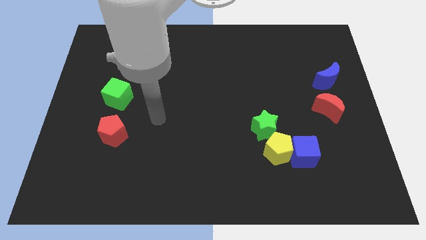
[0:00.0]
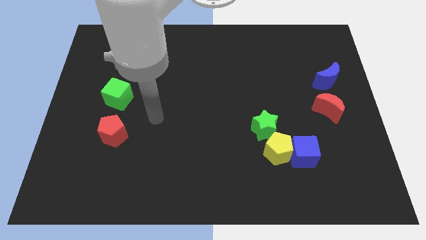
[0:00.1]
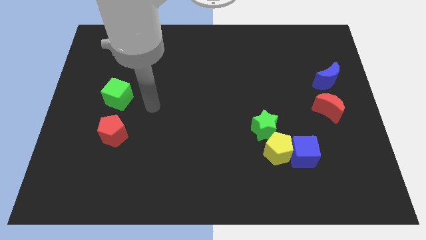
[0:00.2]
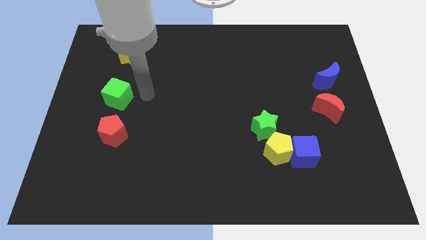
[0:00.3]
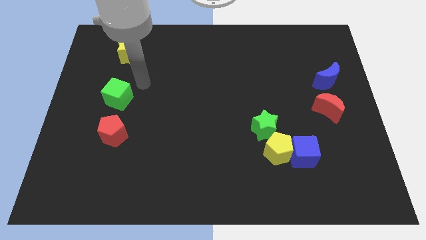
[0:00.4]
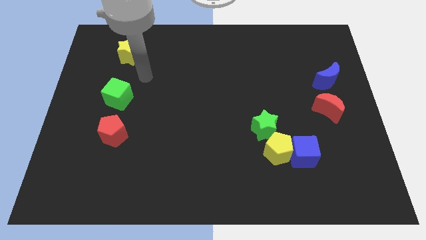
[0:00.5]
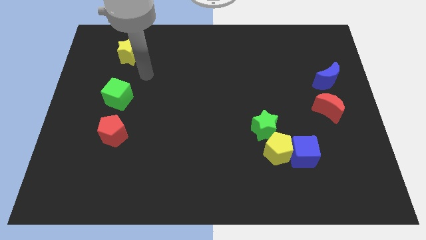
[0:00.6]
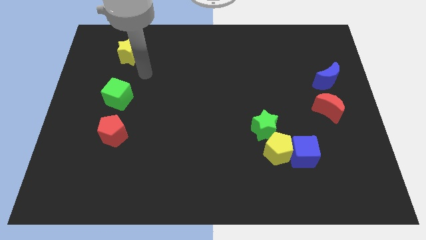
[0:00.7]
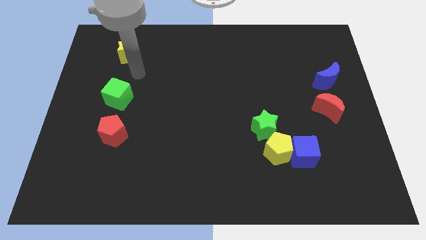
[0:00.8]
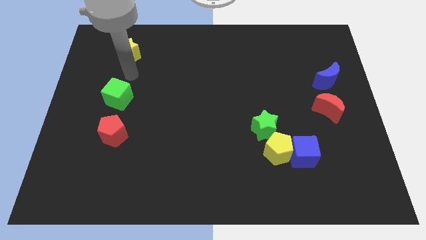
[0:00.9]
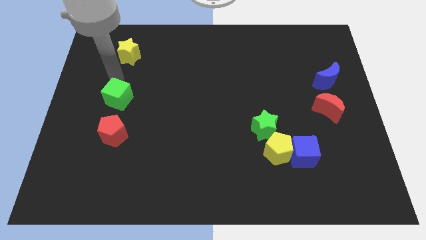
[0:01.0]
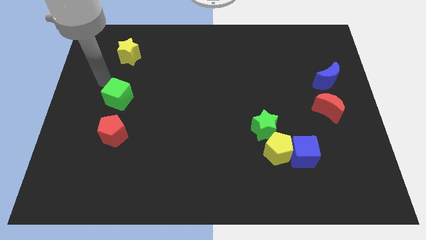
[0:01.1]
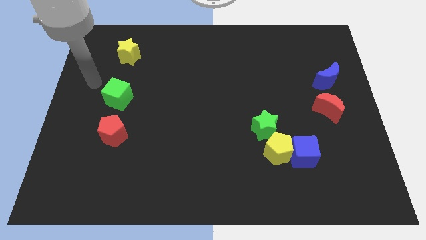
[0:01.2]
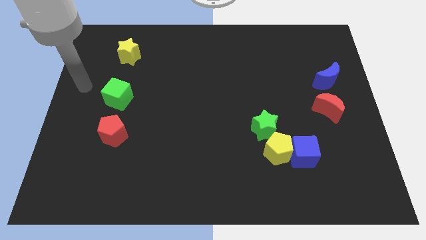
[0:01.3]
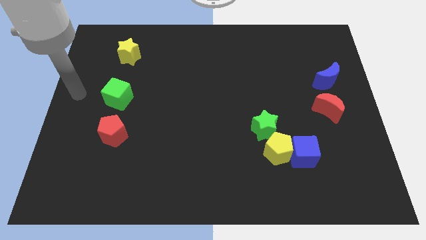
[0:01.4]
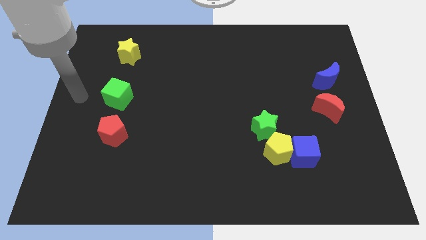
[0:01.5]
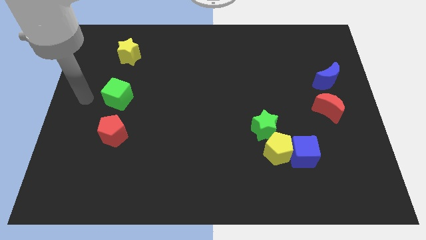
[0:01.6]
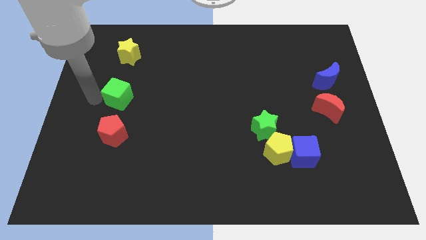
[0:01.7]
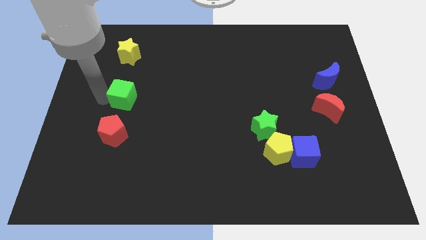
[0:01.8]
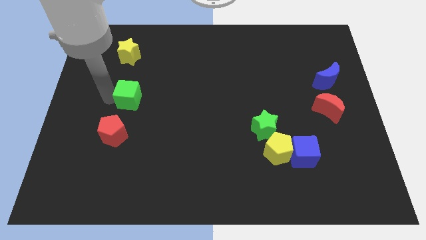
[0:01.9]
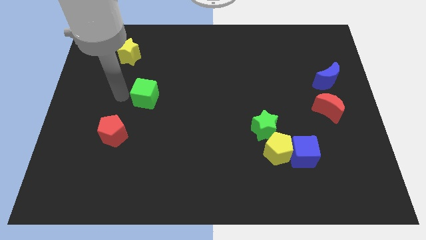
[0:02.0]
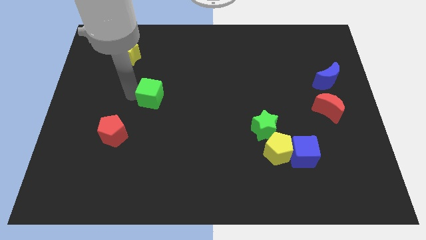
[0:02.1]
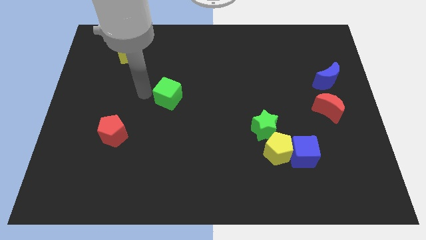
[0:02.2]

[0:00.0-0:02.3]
push the green cube to the right side of the board

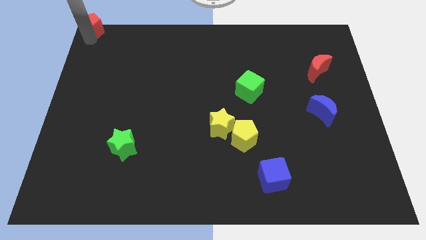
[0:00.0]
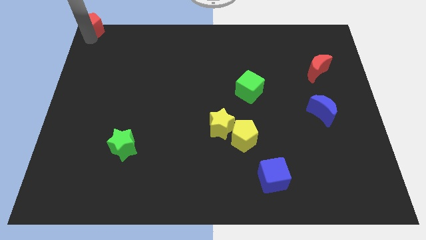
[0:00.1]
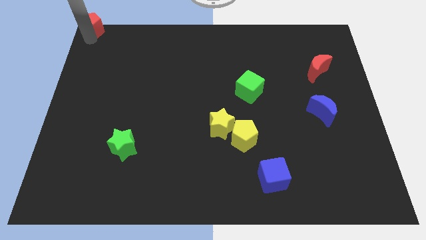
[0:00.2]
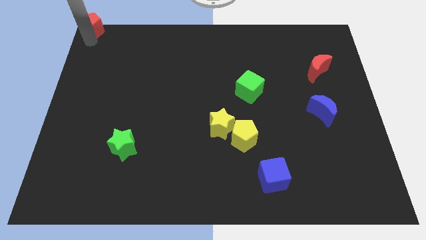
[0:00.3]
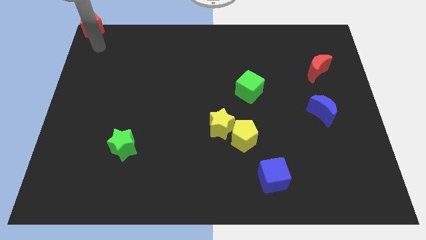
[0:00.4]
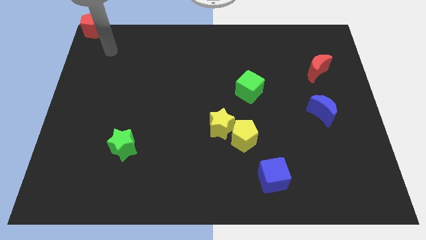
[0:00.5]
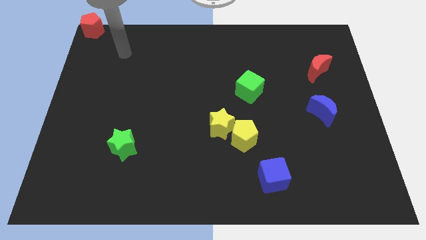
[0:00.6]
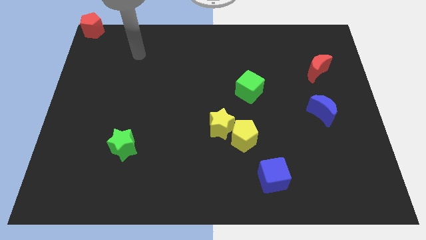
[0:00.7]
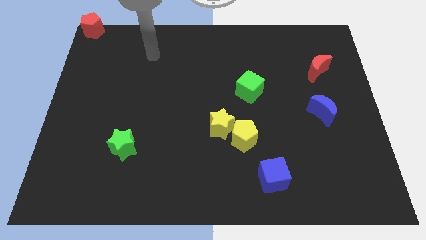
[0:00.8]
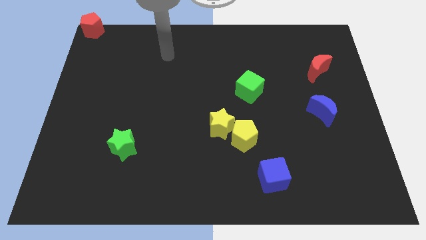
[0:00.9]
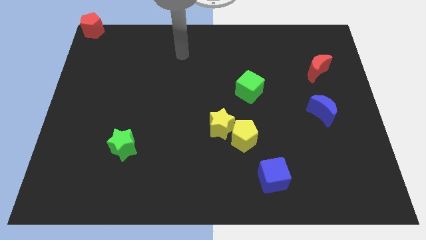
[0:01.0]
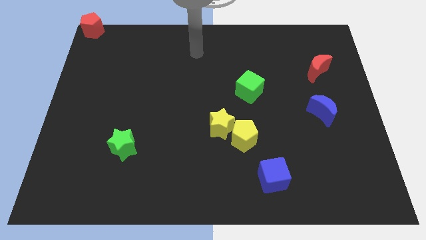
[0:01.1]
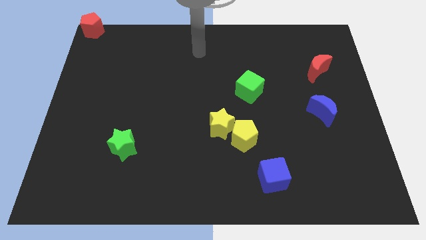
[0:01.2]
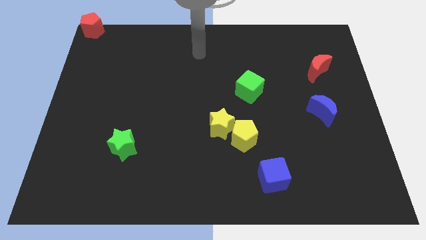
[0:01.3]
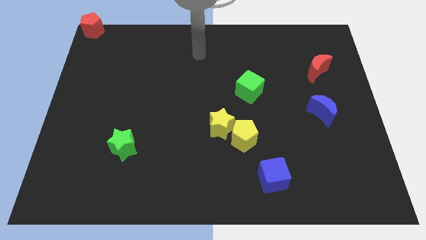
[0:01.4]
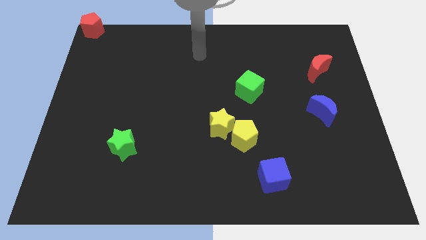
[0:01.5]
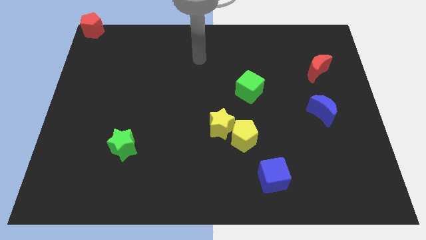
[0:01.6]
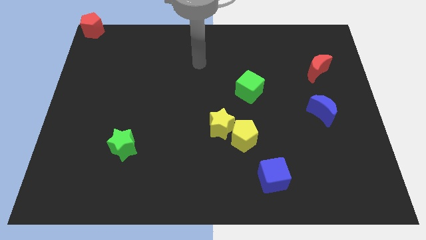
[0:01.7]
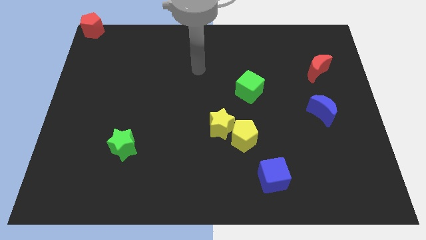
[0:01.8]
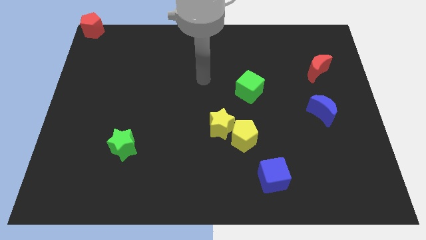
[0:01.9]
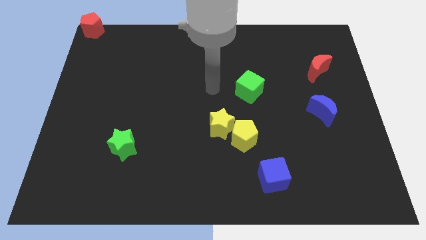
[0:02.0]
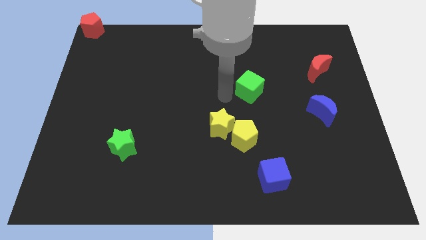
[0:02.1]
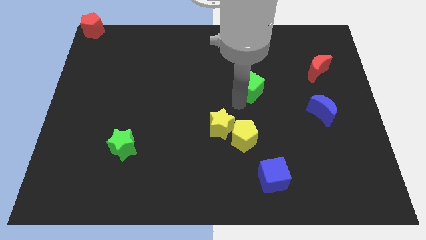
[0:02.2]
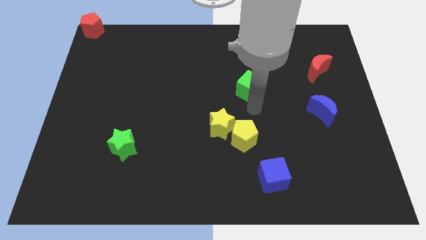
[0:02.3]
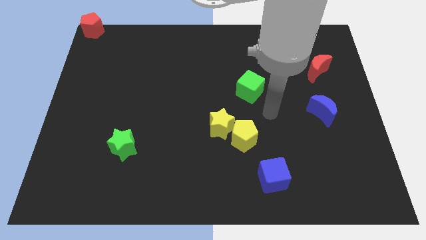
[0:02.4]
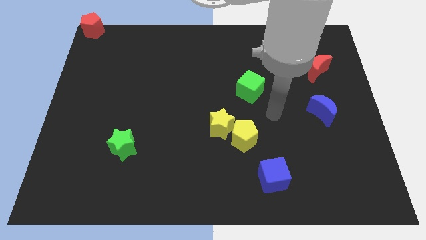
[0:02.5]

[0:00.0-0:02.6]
move the arm towards the right bottom of the green cube

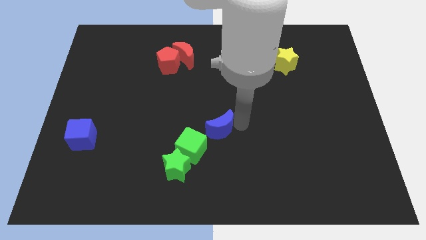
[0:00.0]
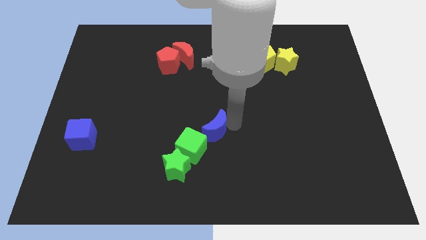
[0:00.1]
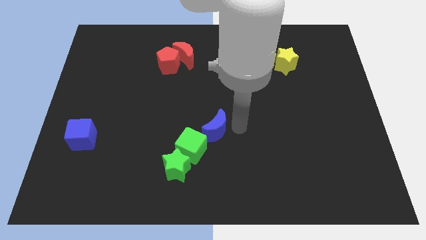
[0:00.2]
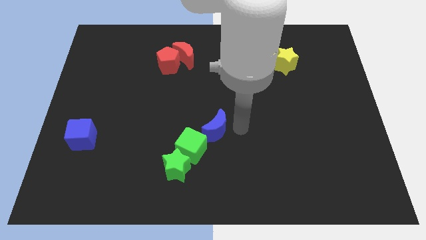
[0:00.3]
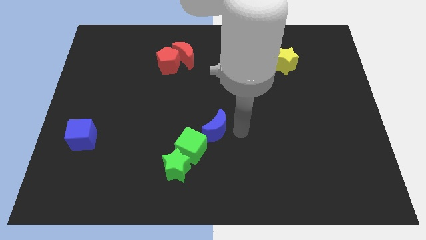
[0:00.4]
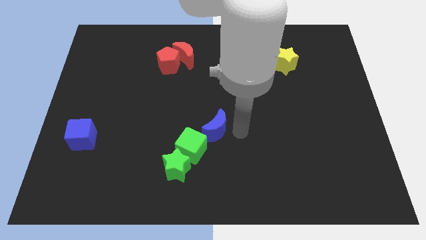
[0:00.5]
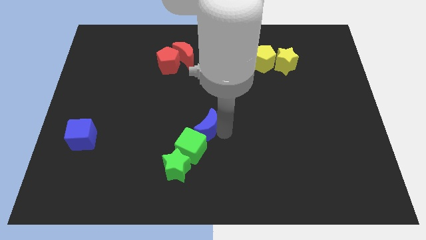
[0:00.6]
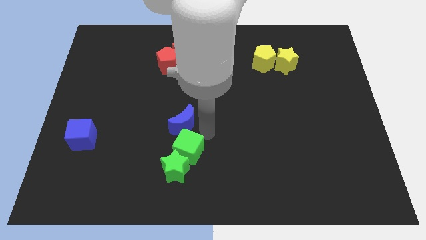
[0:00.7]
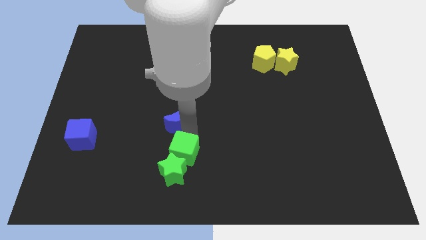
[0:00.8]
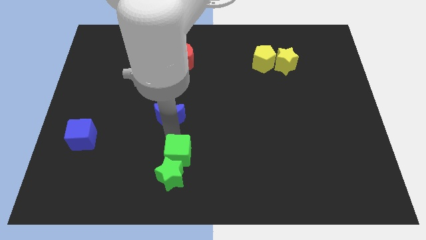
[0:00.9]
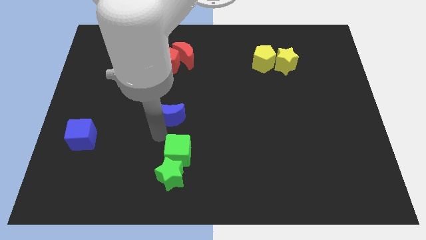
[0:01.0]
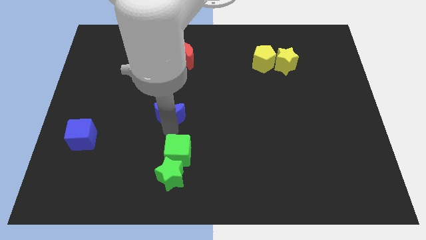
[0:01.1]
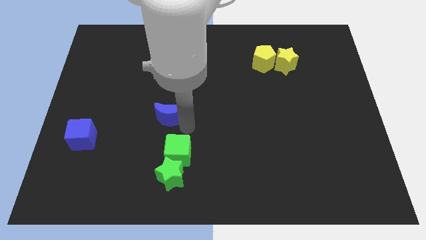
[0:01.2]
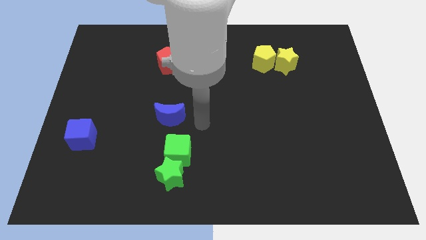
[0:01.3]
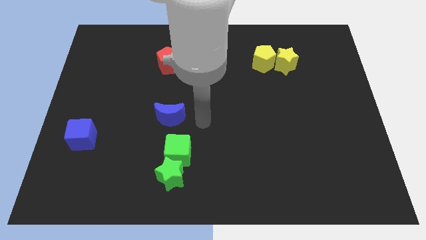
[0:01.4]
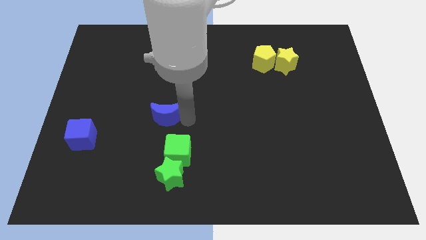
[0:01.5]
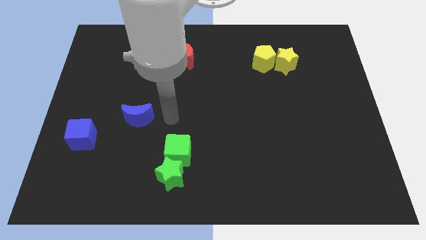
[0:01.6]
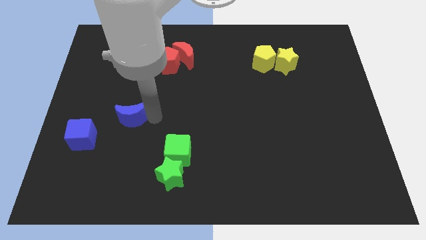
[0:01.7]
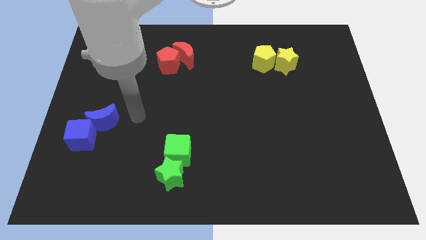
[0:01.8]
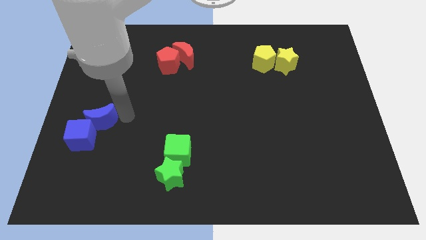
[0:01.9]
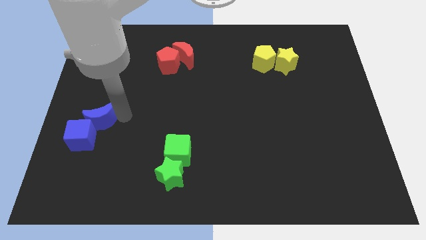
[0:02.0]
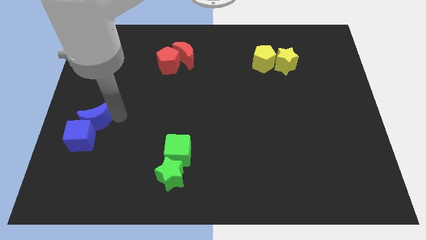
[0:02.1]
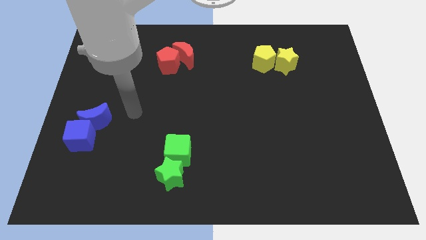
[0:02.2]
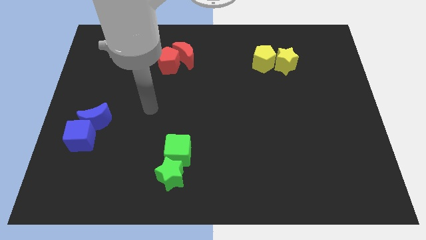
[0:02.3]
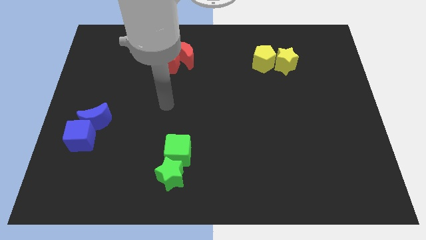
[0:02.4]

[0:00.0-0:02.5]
move the blue crescent into the blue cube

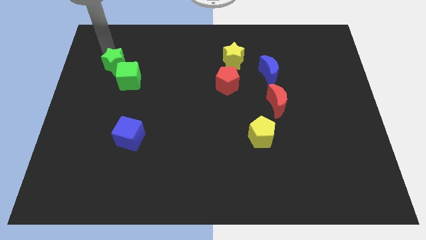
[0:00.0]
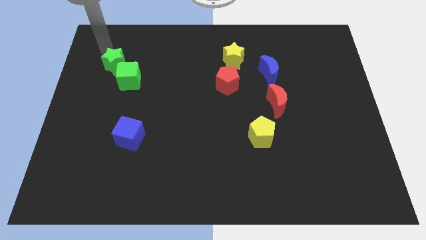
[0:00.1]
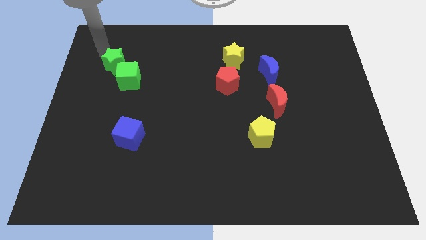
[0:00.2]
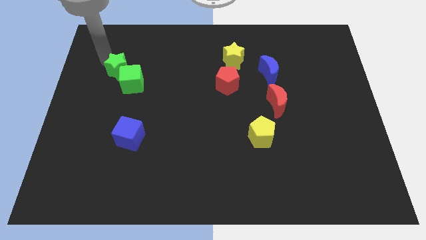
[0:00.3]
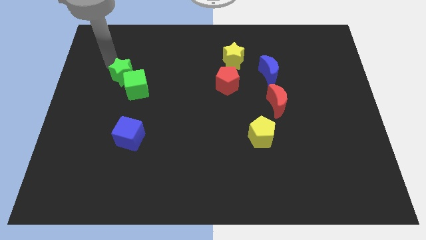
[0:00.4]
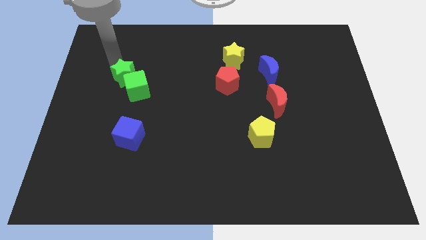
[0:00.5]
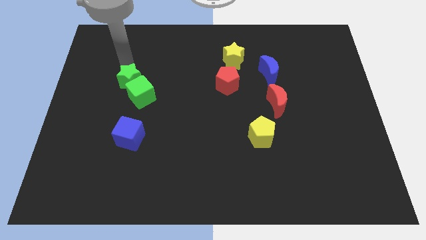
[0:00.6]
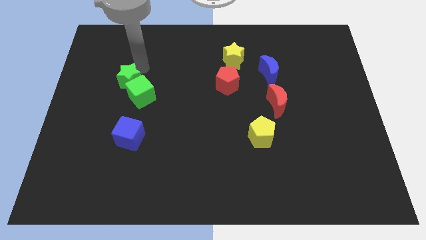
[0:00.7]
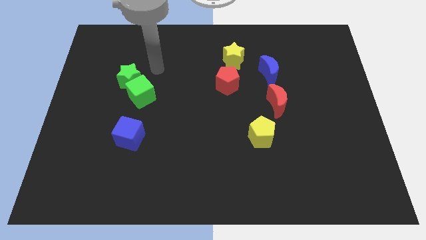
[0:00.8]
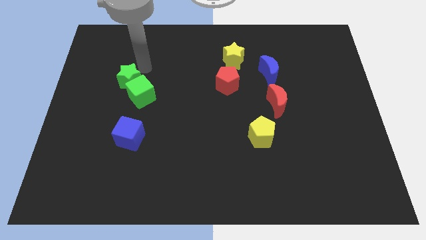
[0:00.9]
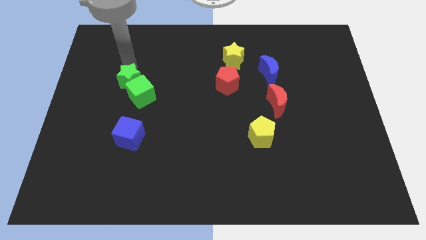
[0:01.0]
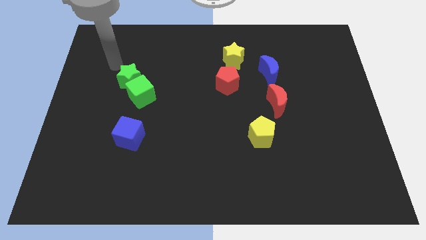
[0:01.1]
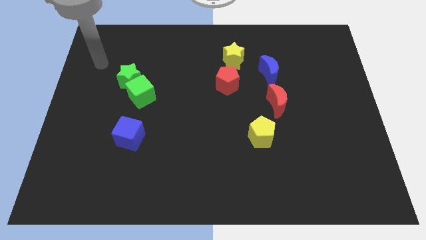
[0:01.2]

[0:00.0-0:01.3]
push the group of green blocks slightly to the bottom of the board

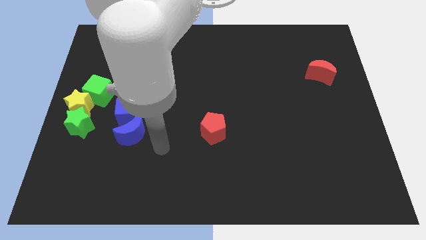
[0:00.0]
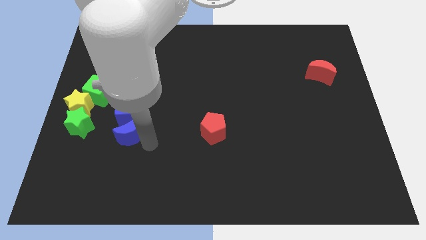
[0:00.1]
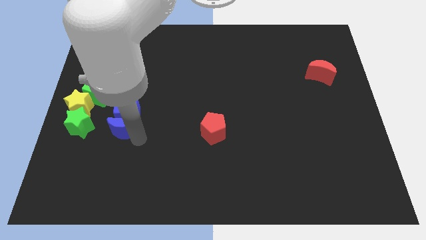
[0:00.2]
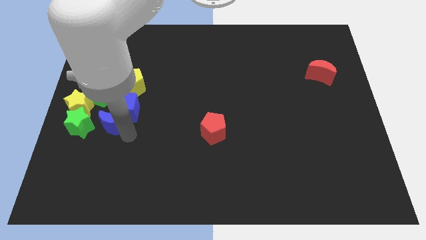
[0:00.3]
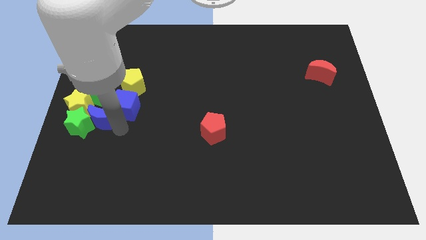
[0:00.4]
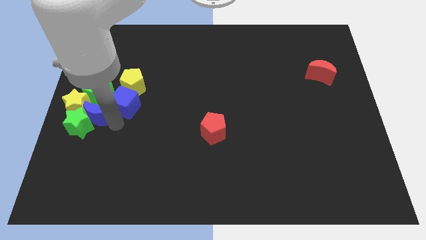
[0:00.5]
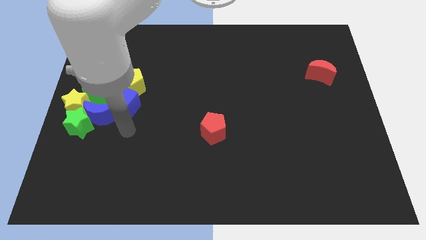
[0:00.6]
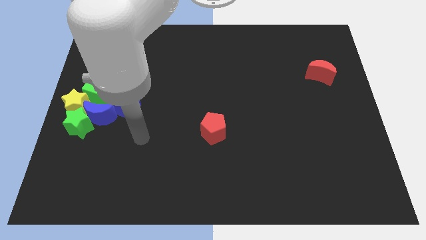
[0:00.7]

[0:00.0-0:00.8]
place the blue moon right to the yellow star
